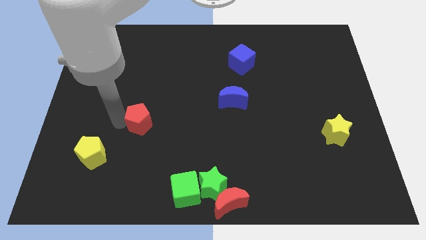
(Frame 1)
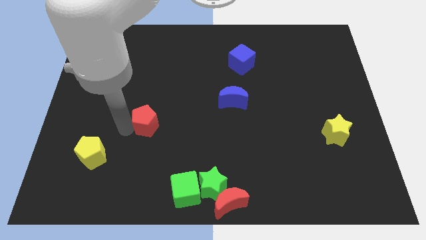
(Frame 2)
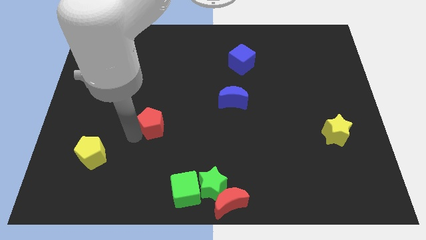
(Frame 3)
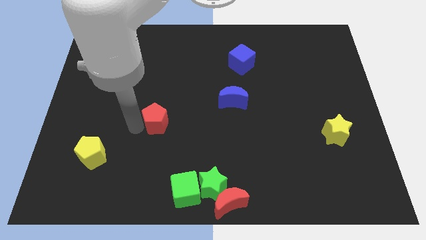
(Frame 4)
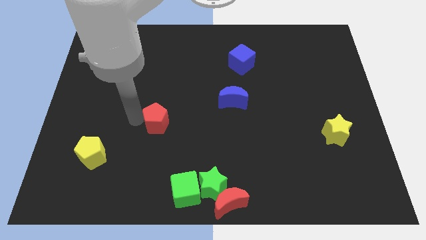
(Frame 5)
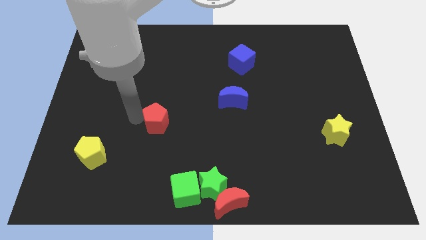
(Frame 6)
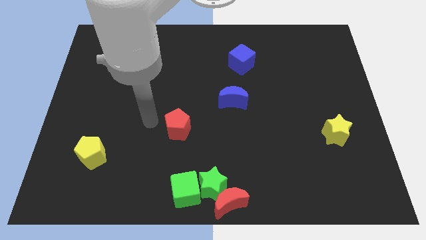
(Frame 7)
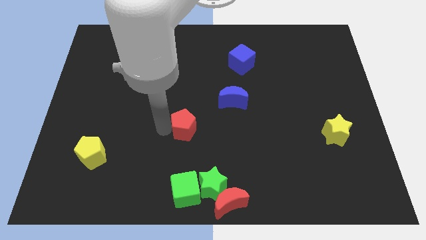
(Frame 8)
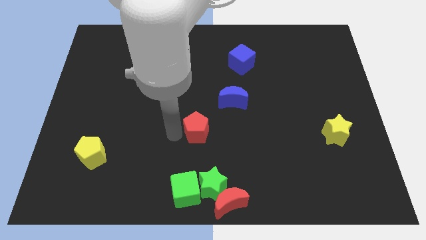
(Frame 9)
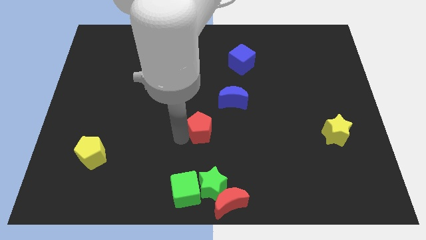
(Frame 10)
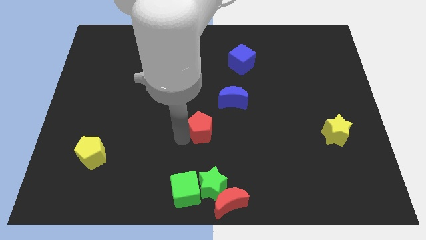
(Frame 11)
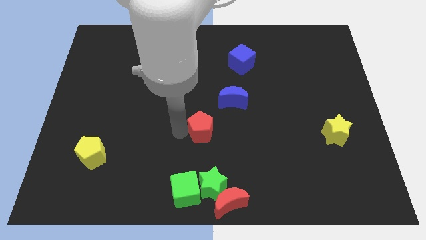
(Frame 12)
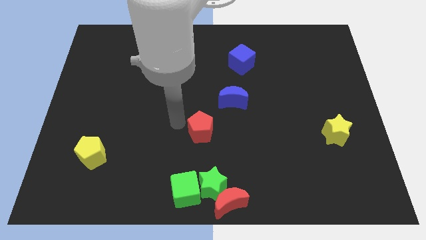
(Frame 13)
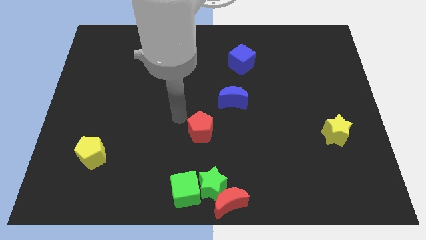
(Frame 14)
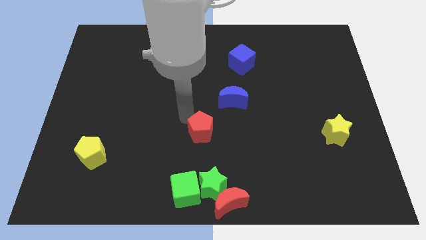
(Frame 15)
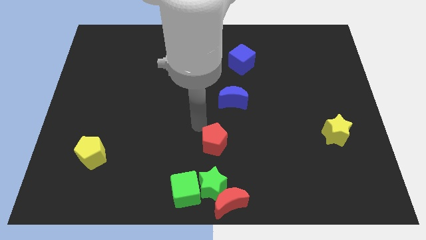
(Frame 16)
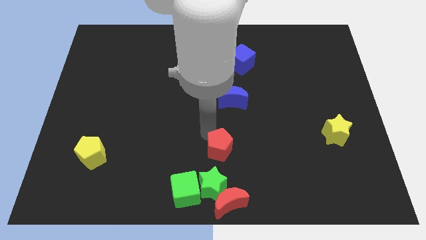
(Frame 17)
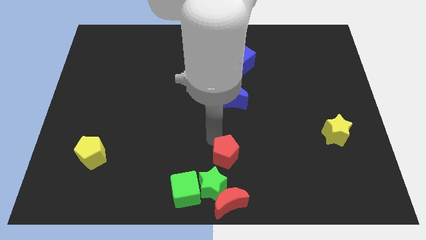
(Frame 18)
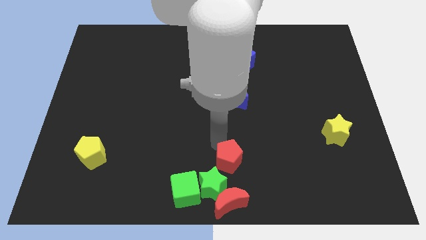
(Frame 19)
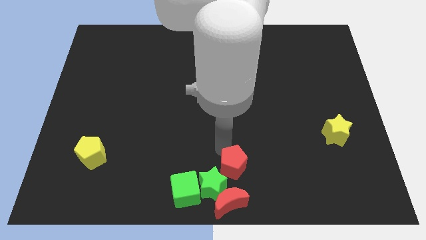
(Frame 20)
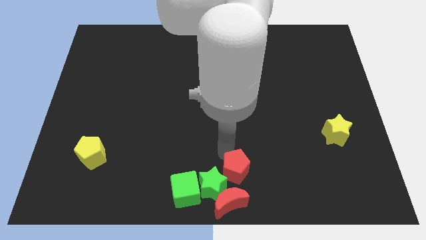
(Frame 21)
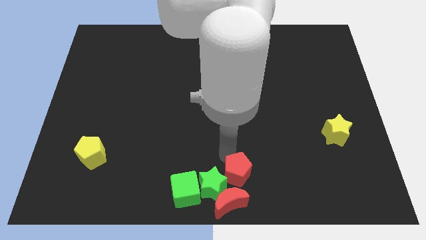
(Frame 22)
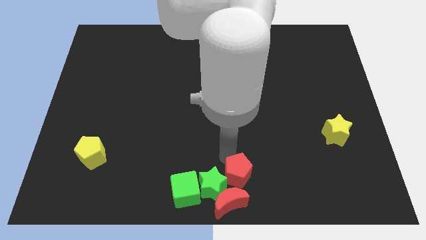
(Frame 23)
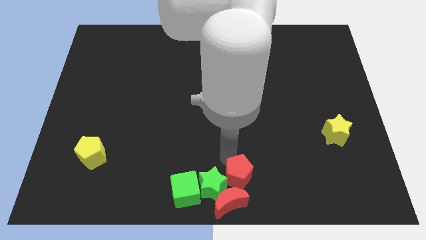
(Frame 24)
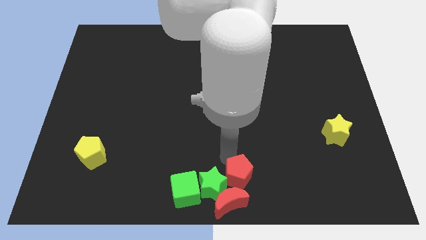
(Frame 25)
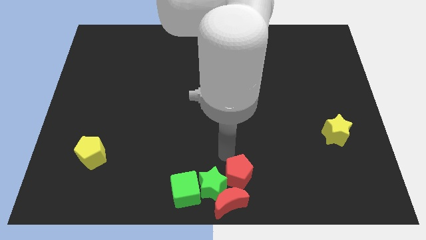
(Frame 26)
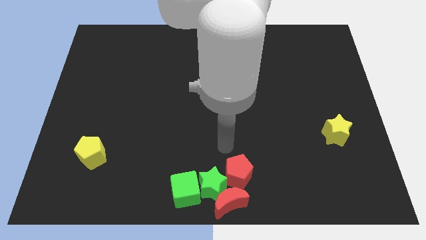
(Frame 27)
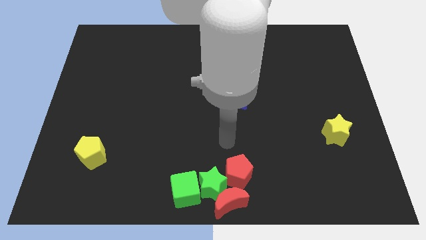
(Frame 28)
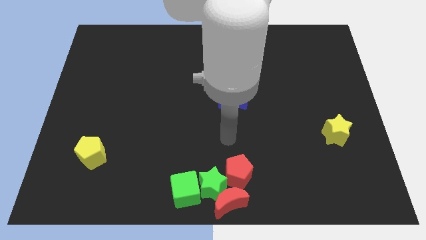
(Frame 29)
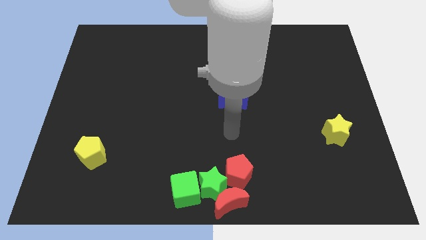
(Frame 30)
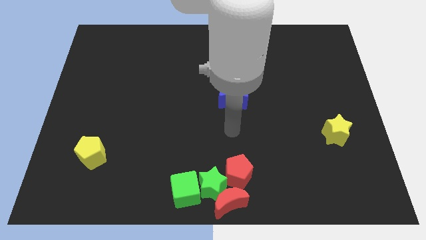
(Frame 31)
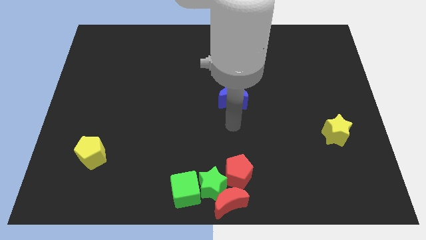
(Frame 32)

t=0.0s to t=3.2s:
slide the red pentagon above the red moon

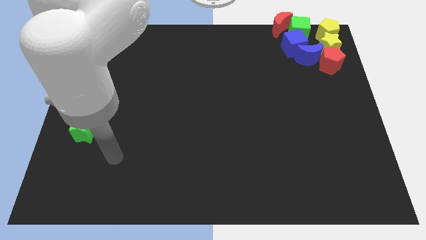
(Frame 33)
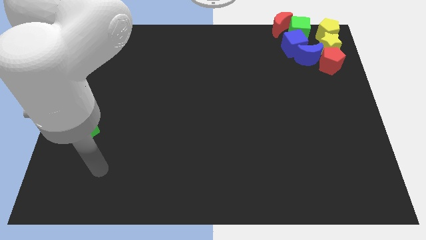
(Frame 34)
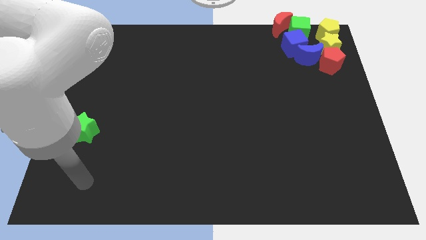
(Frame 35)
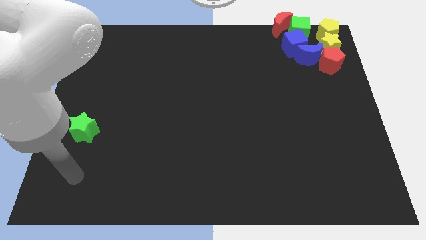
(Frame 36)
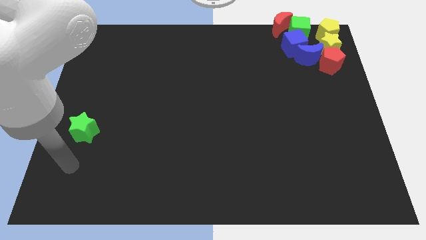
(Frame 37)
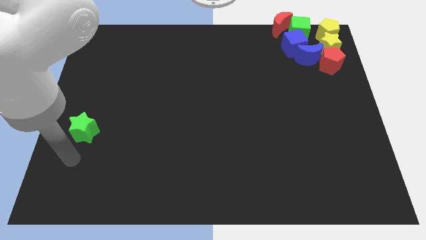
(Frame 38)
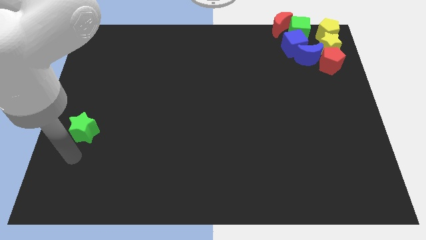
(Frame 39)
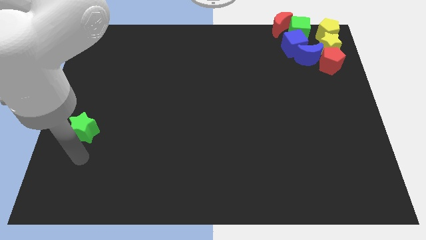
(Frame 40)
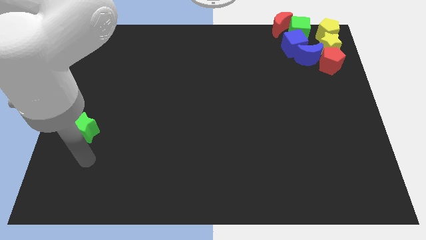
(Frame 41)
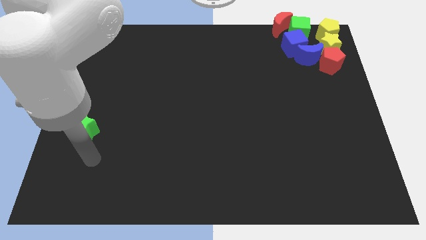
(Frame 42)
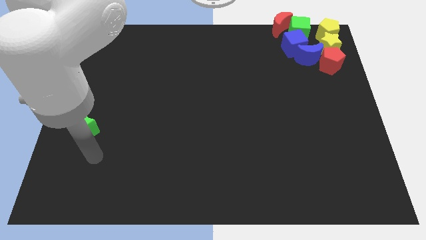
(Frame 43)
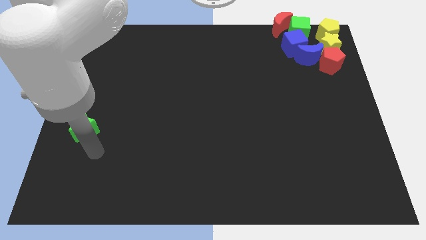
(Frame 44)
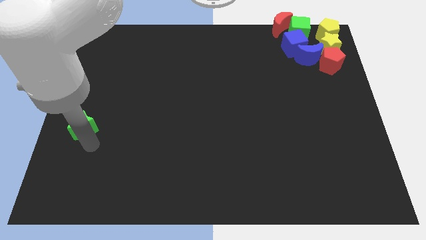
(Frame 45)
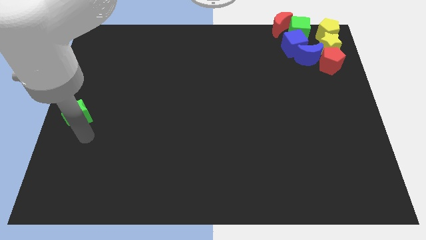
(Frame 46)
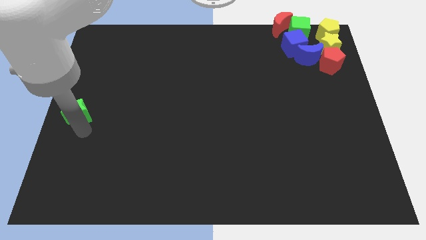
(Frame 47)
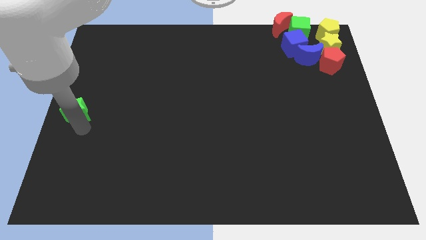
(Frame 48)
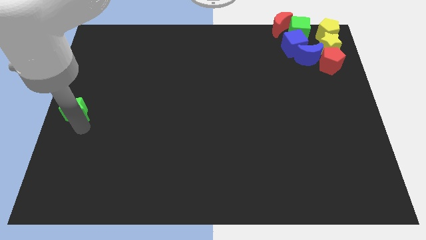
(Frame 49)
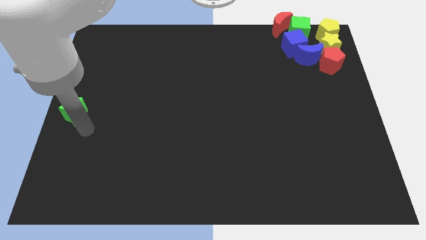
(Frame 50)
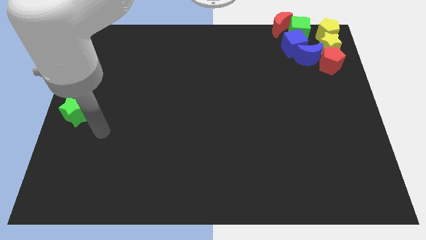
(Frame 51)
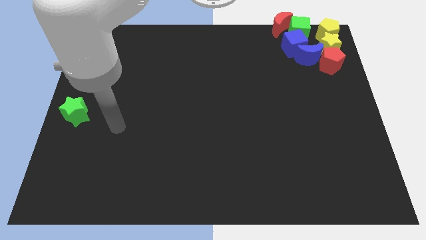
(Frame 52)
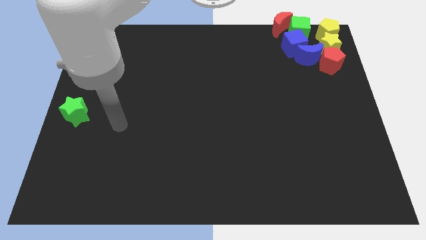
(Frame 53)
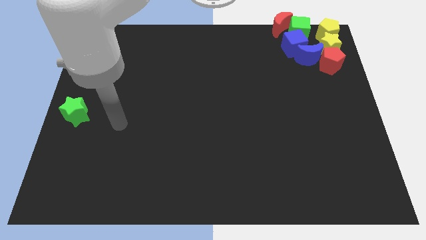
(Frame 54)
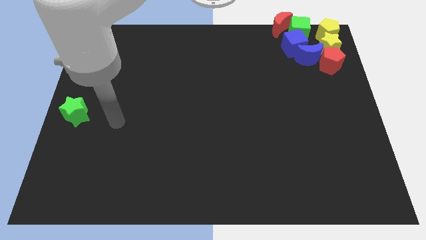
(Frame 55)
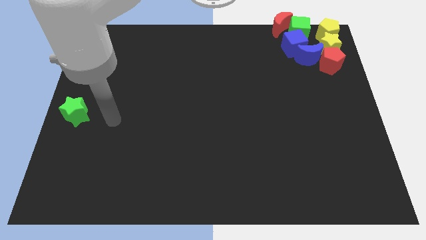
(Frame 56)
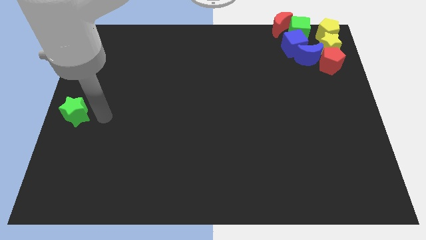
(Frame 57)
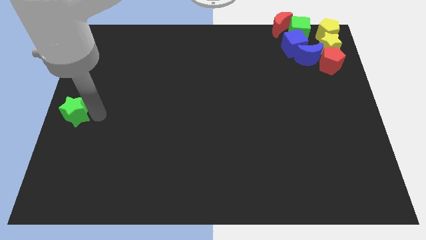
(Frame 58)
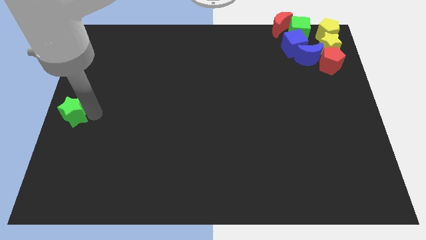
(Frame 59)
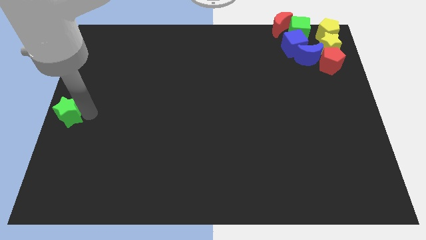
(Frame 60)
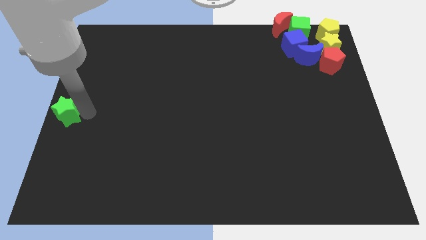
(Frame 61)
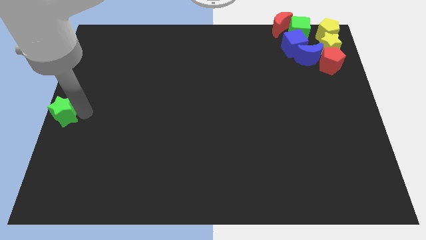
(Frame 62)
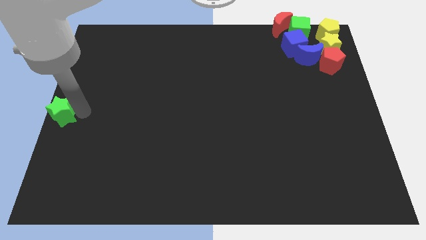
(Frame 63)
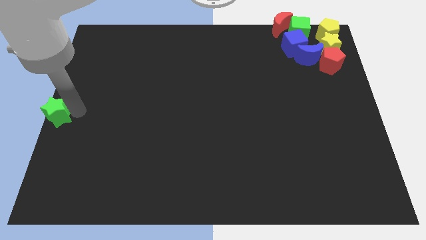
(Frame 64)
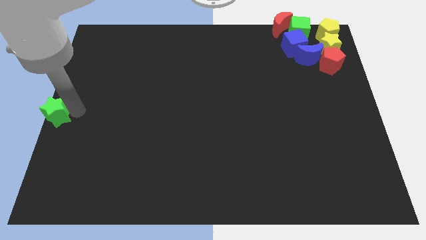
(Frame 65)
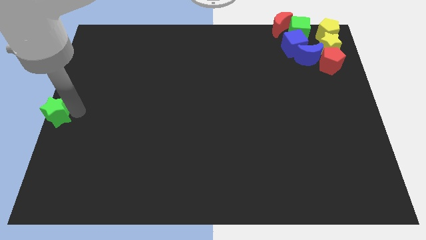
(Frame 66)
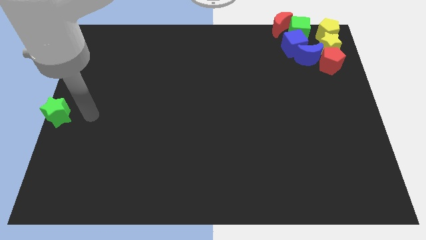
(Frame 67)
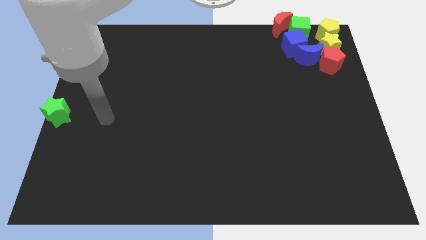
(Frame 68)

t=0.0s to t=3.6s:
push the green star to the left center

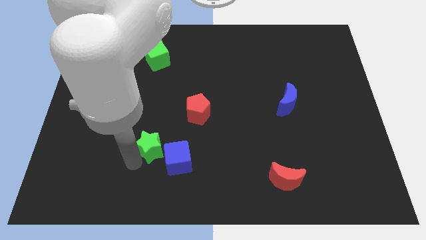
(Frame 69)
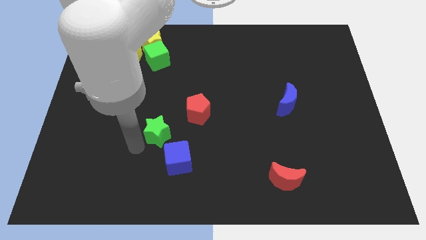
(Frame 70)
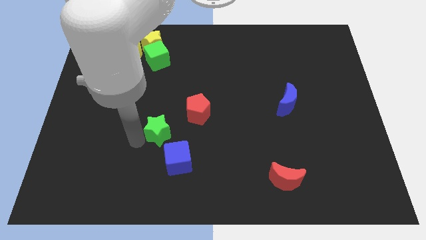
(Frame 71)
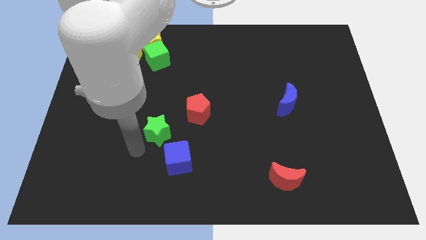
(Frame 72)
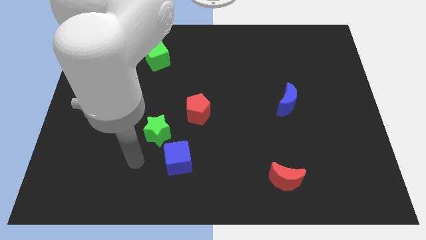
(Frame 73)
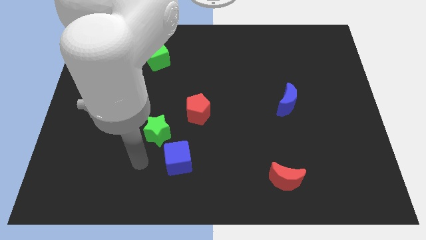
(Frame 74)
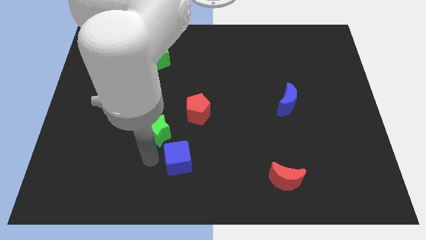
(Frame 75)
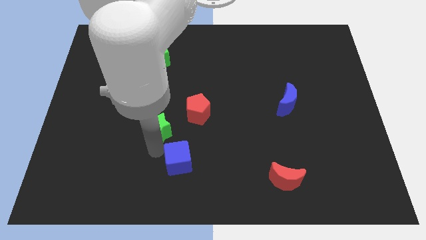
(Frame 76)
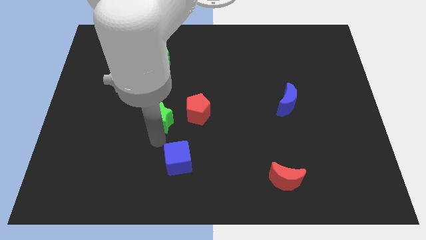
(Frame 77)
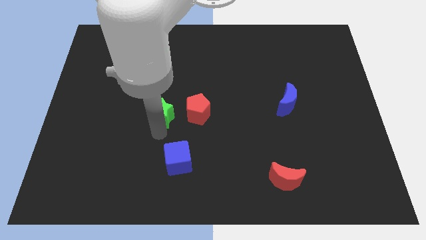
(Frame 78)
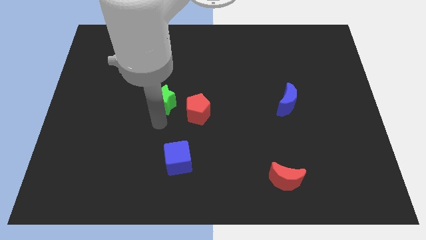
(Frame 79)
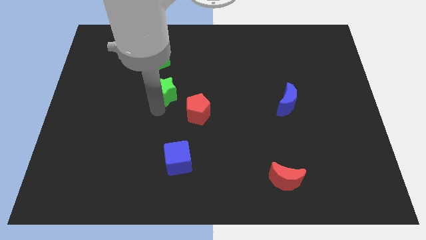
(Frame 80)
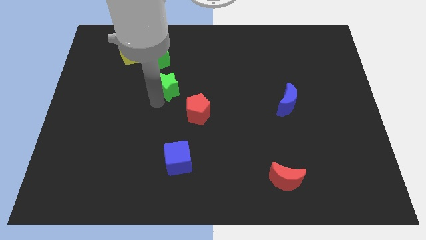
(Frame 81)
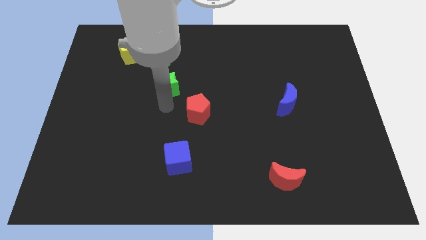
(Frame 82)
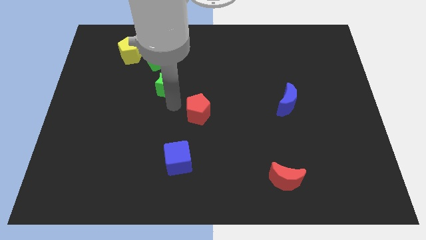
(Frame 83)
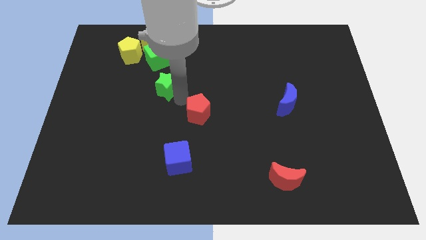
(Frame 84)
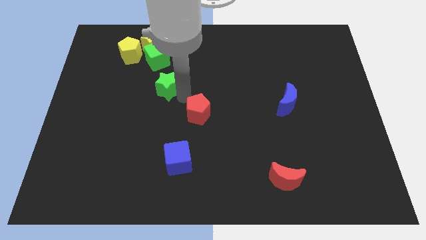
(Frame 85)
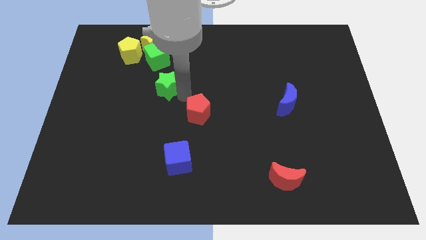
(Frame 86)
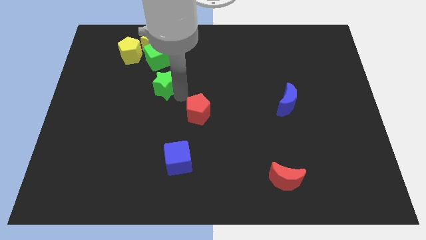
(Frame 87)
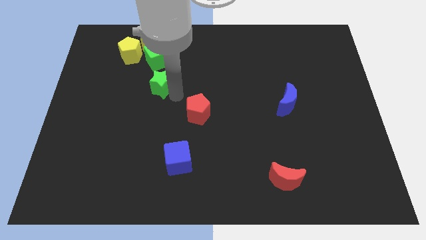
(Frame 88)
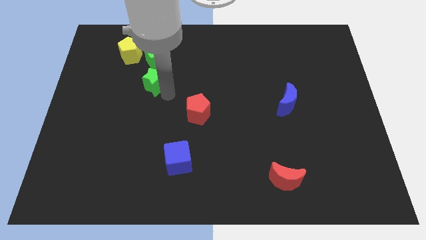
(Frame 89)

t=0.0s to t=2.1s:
move the green star to the bottom side of the green cube

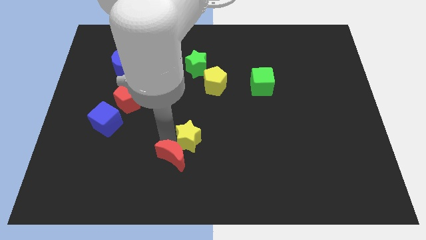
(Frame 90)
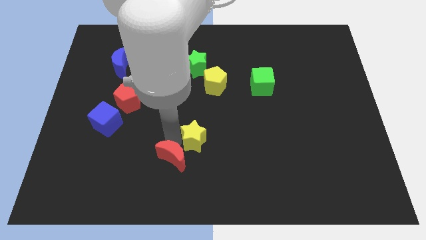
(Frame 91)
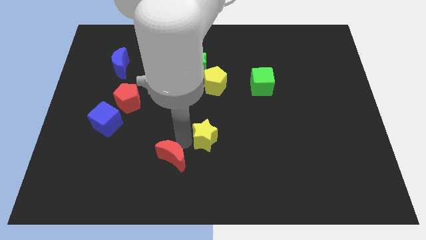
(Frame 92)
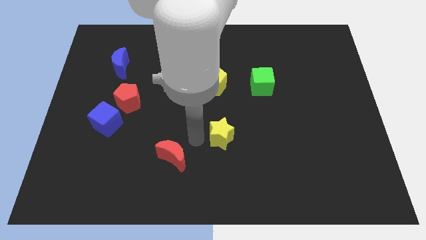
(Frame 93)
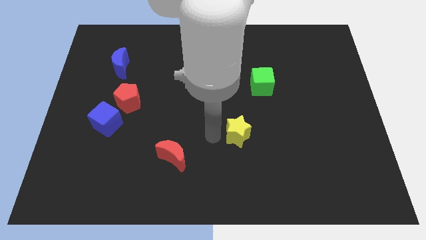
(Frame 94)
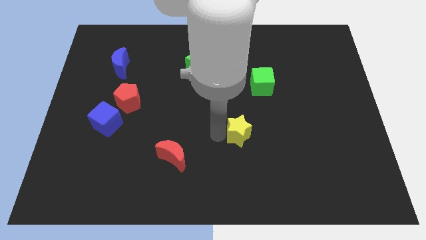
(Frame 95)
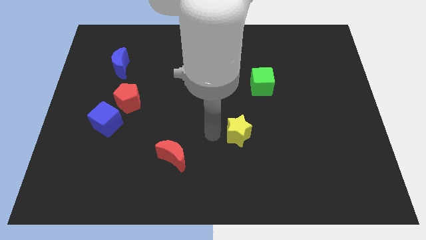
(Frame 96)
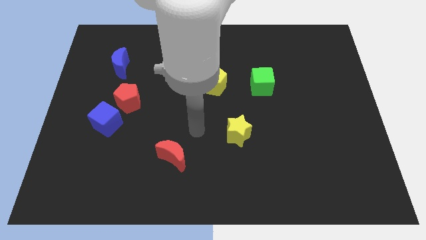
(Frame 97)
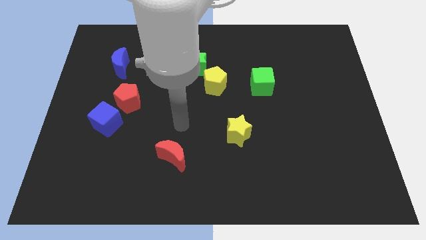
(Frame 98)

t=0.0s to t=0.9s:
push the yellow star towards right
